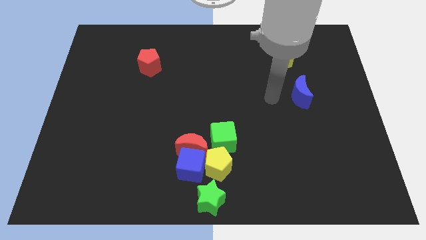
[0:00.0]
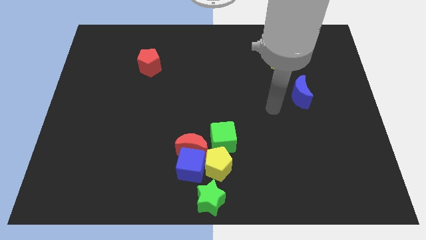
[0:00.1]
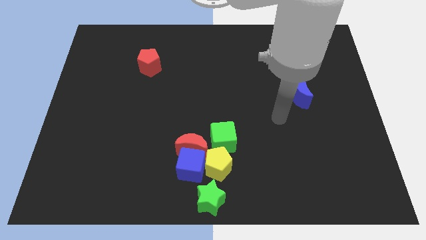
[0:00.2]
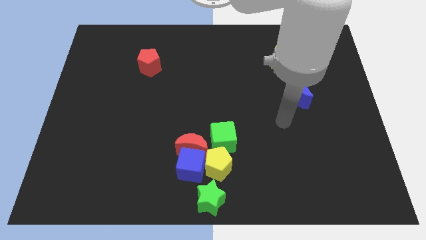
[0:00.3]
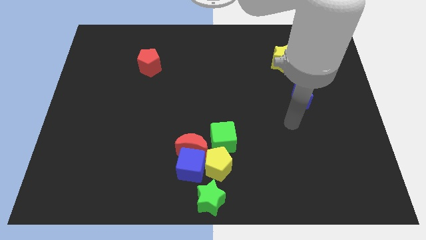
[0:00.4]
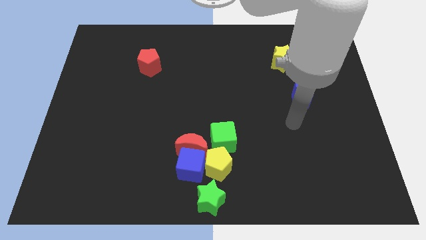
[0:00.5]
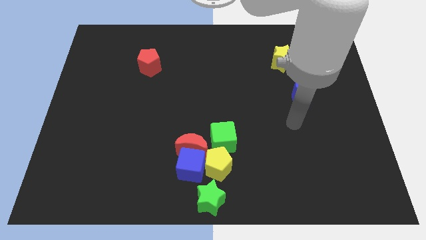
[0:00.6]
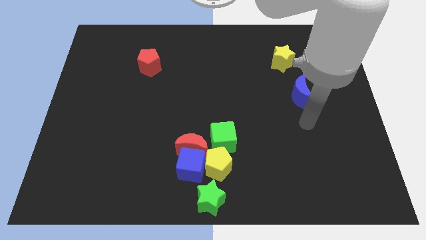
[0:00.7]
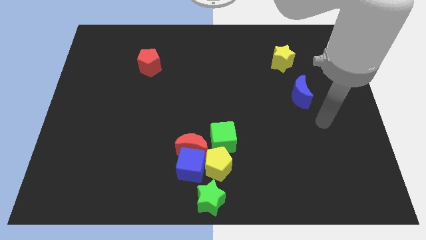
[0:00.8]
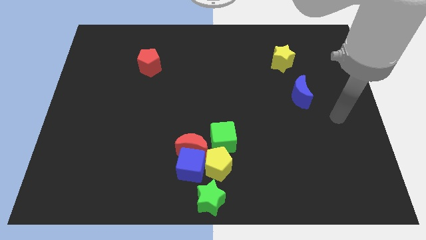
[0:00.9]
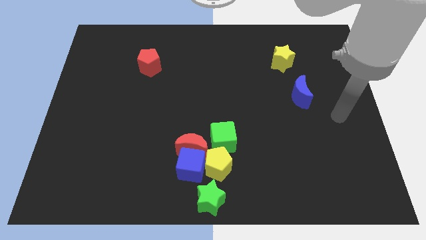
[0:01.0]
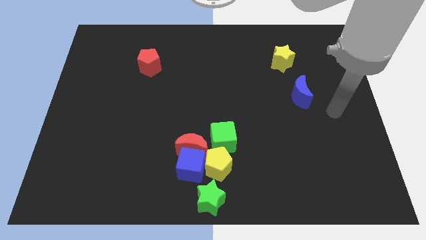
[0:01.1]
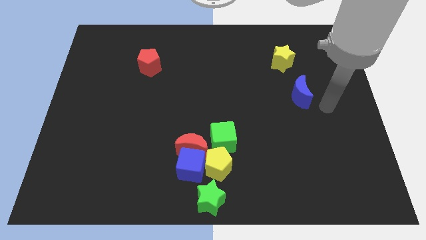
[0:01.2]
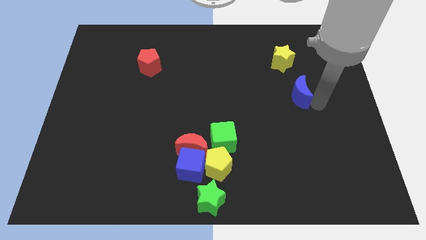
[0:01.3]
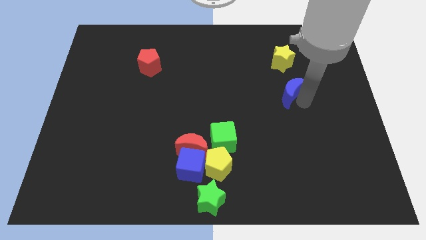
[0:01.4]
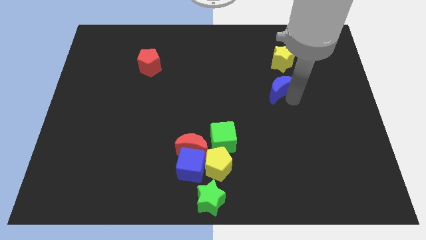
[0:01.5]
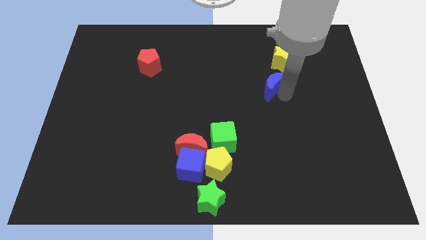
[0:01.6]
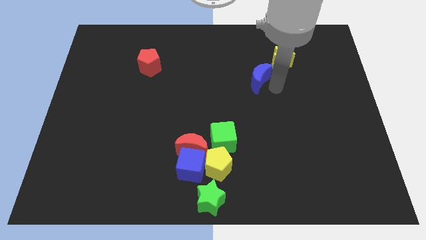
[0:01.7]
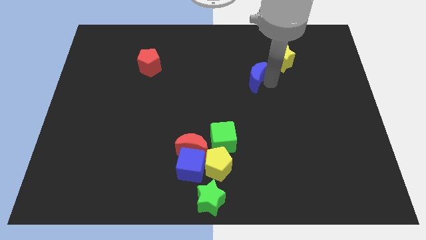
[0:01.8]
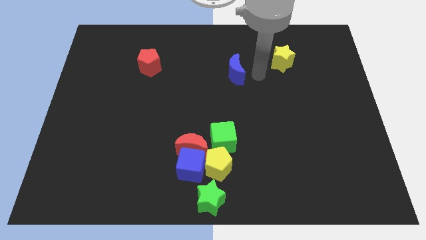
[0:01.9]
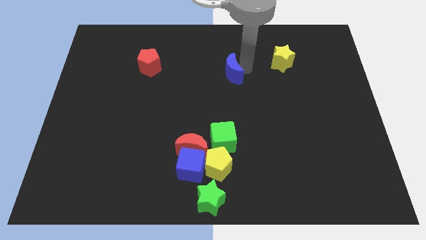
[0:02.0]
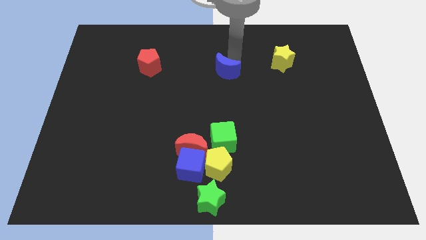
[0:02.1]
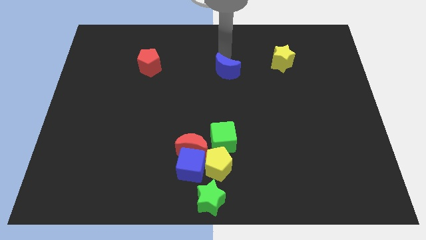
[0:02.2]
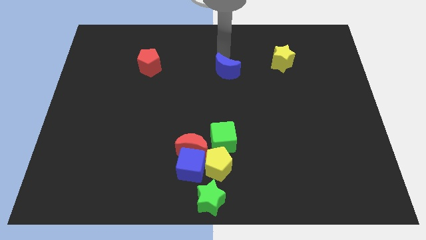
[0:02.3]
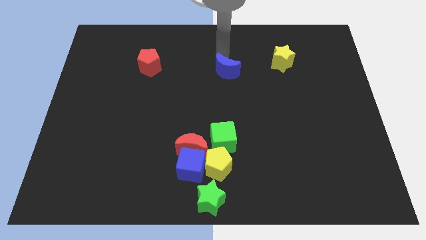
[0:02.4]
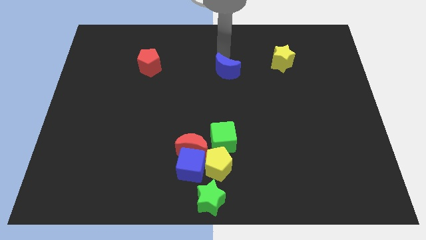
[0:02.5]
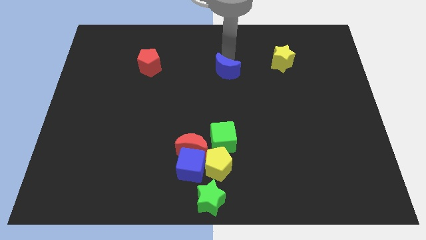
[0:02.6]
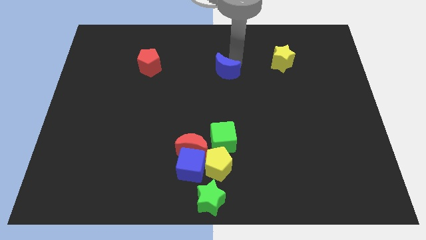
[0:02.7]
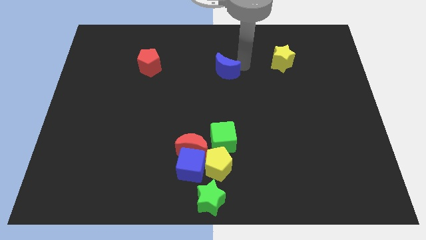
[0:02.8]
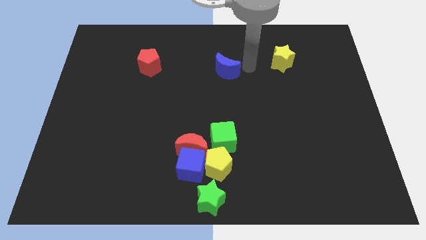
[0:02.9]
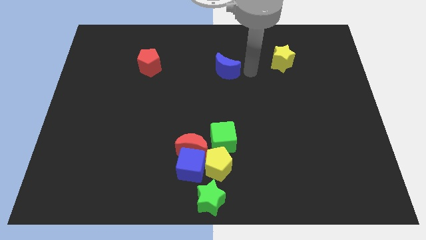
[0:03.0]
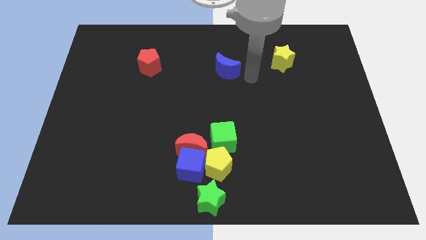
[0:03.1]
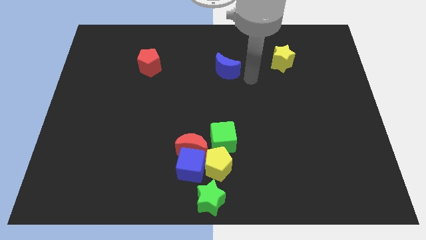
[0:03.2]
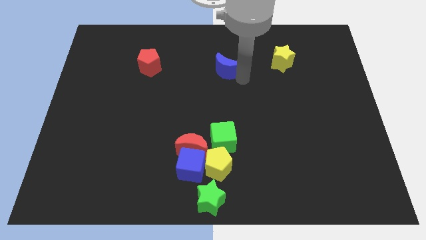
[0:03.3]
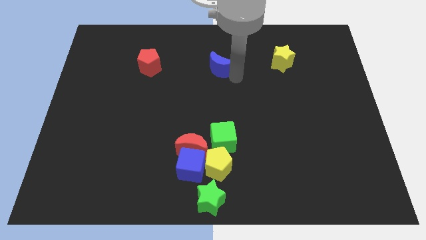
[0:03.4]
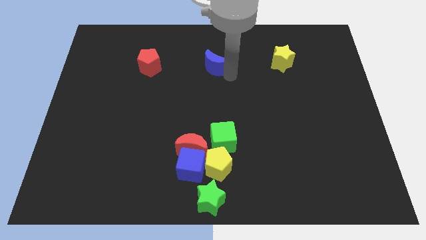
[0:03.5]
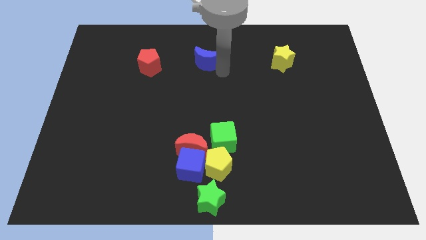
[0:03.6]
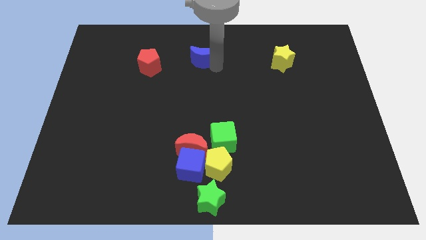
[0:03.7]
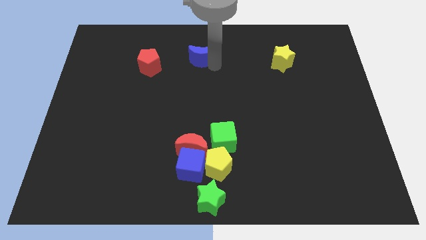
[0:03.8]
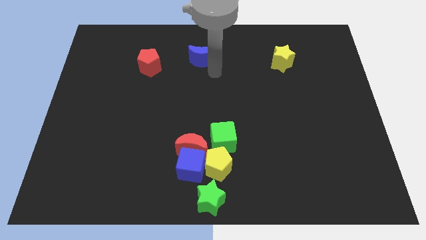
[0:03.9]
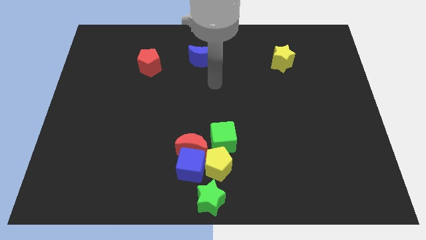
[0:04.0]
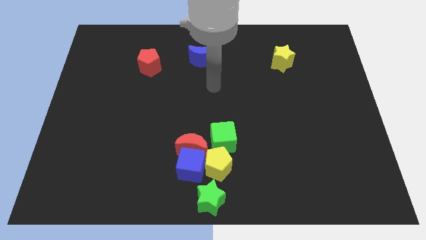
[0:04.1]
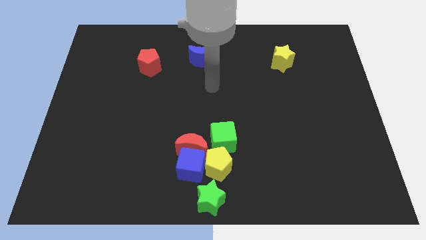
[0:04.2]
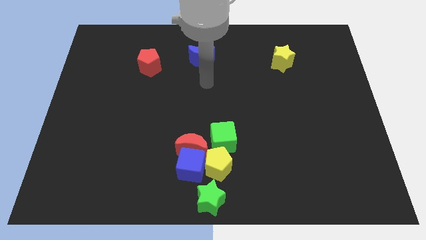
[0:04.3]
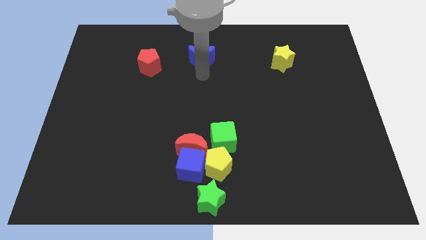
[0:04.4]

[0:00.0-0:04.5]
move the blue crescent to the top left

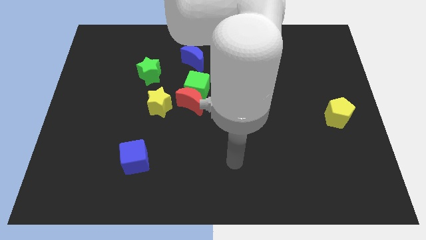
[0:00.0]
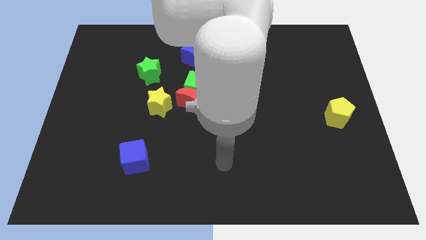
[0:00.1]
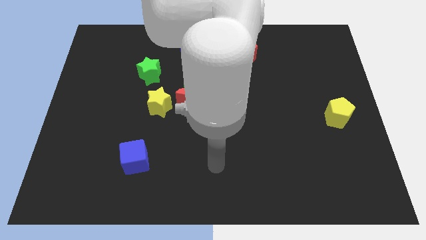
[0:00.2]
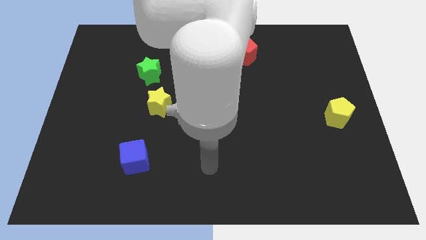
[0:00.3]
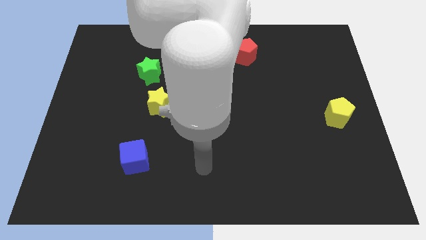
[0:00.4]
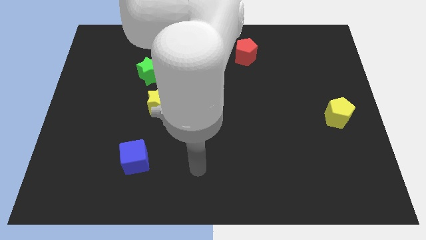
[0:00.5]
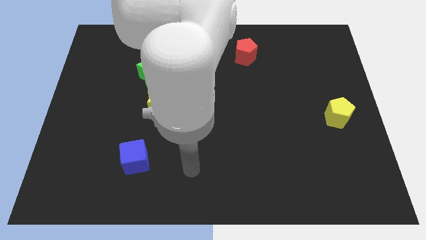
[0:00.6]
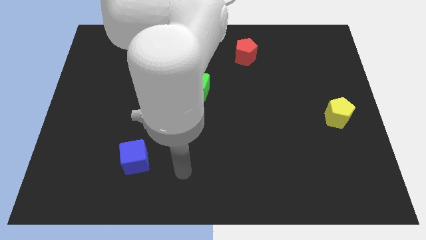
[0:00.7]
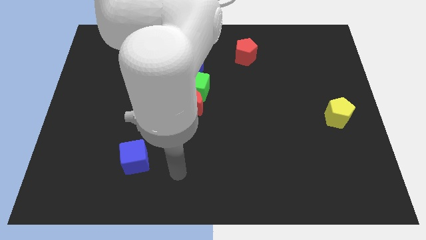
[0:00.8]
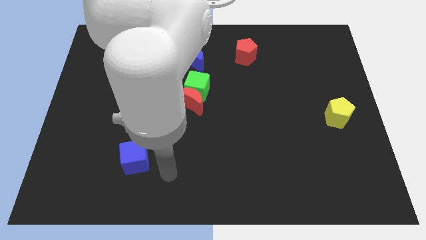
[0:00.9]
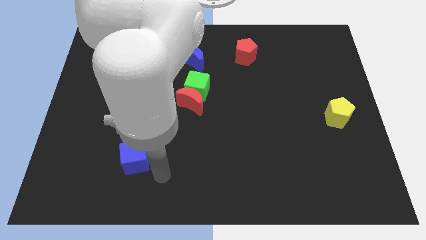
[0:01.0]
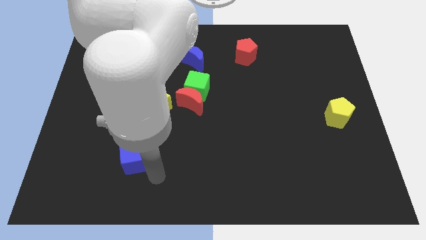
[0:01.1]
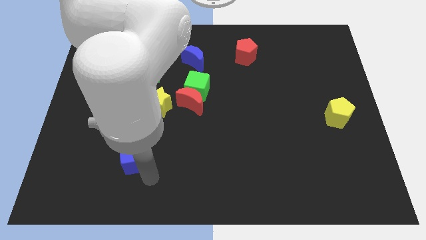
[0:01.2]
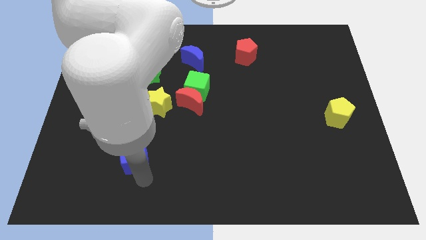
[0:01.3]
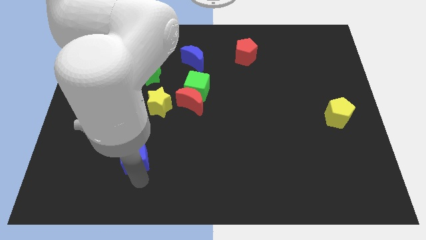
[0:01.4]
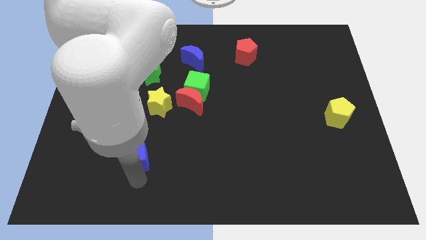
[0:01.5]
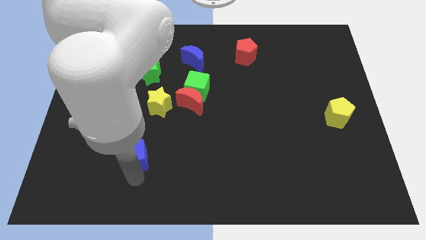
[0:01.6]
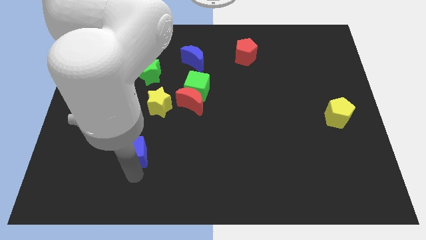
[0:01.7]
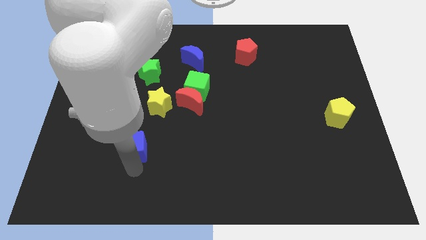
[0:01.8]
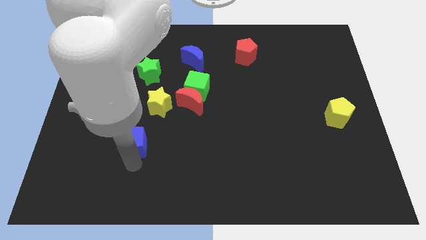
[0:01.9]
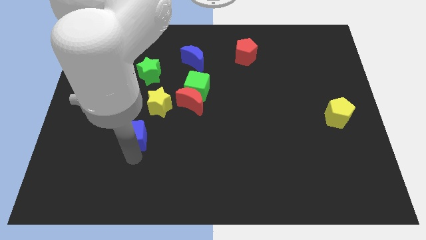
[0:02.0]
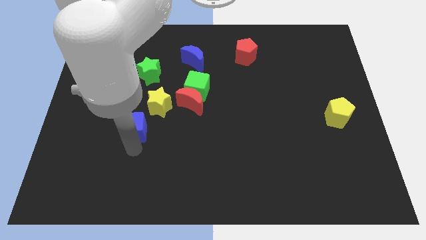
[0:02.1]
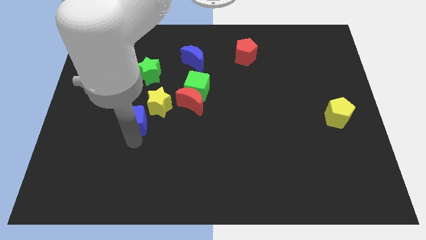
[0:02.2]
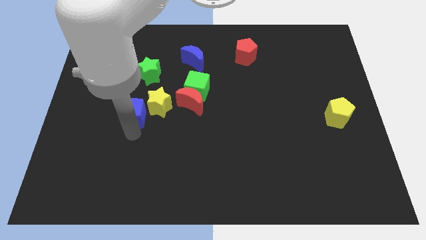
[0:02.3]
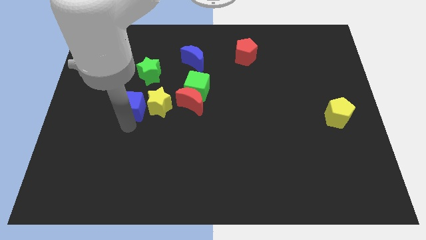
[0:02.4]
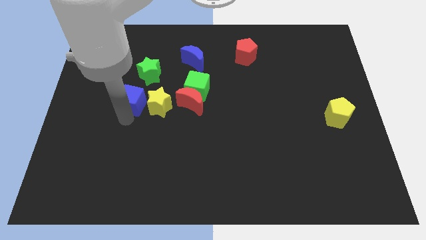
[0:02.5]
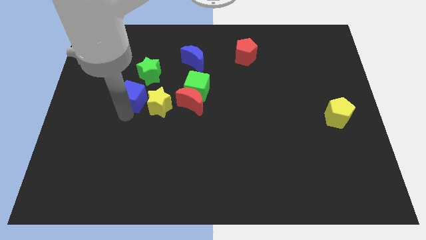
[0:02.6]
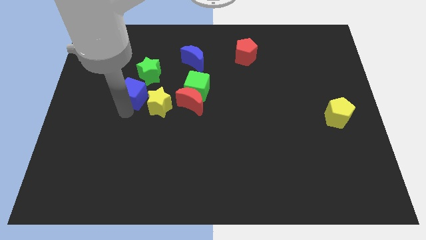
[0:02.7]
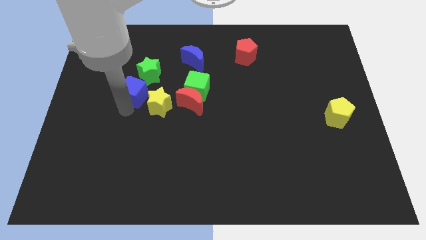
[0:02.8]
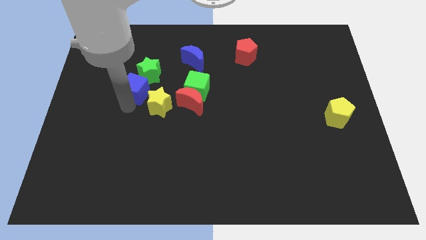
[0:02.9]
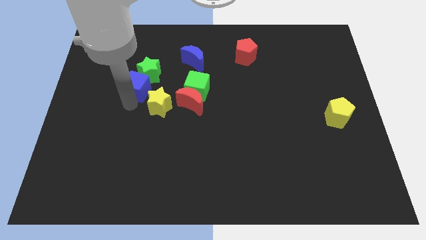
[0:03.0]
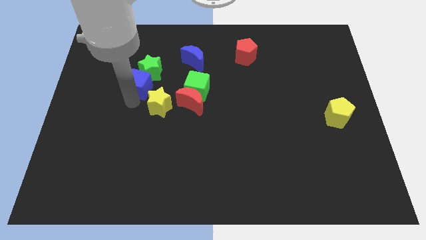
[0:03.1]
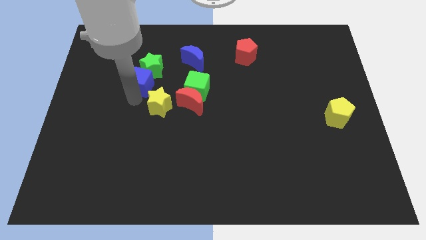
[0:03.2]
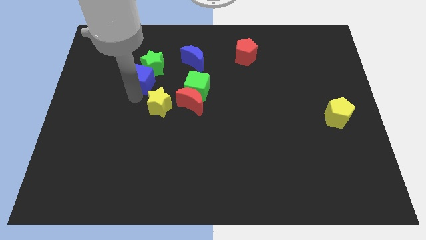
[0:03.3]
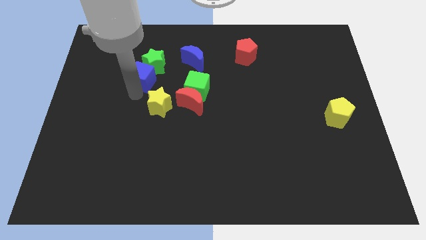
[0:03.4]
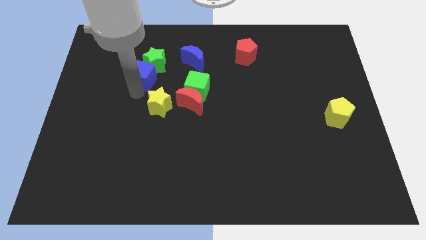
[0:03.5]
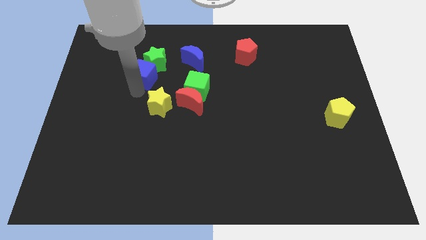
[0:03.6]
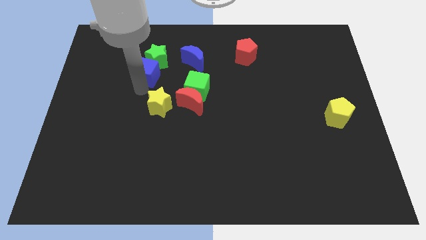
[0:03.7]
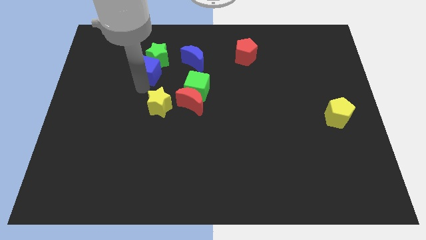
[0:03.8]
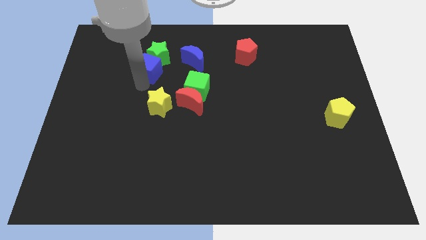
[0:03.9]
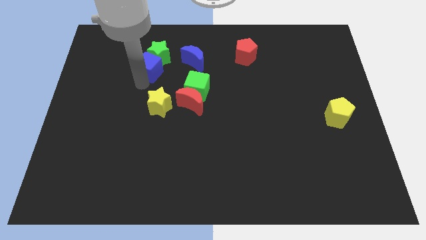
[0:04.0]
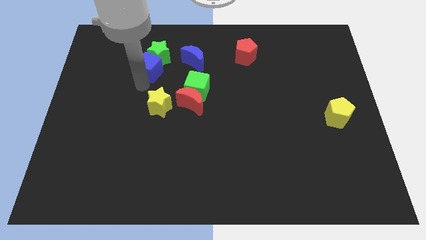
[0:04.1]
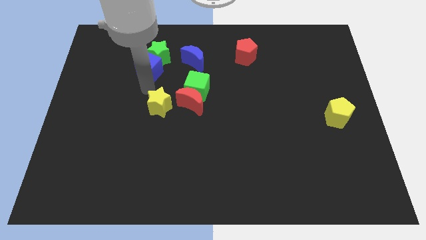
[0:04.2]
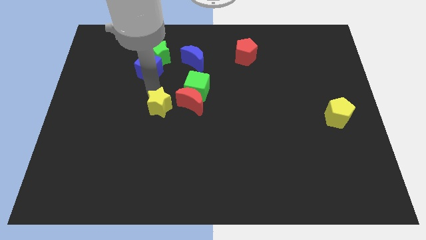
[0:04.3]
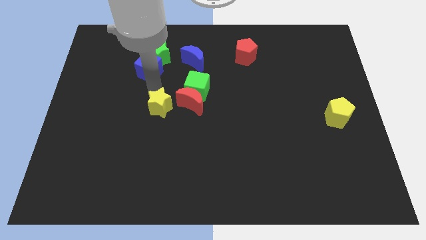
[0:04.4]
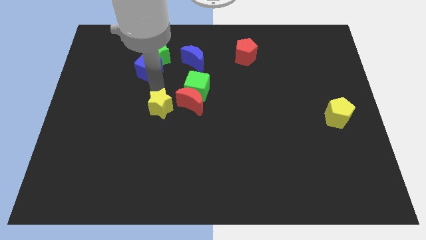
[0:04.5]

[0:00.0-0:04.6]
push blue cube into the green star
